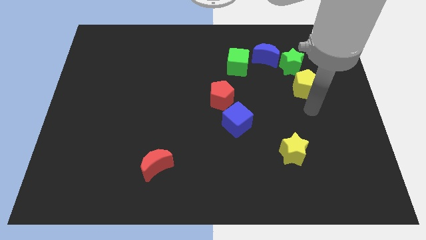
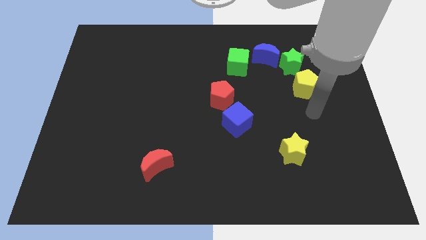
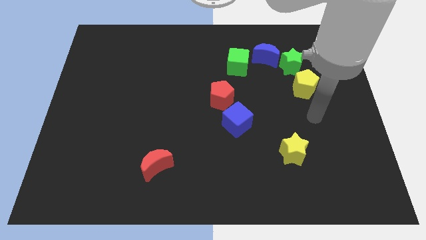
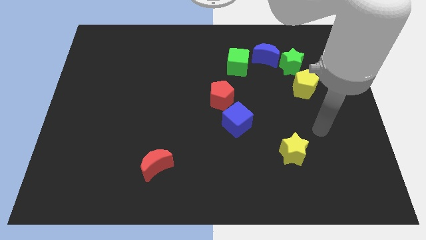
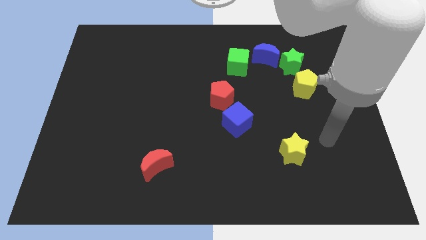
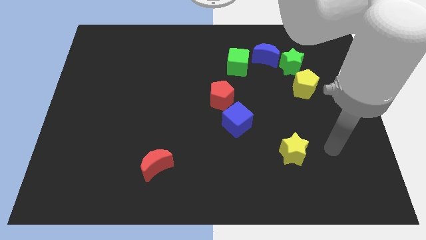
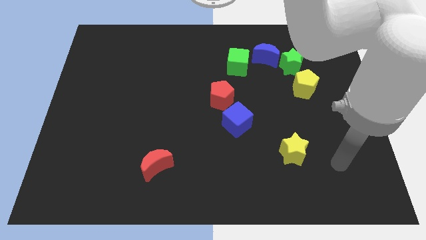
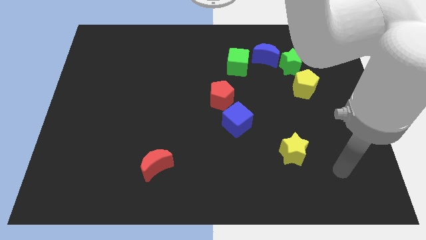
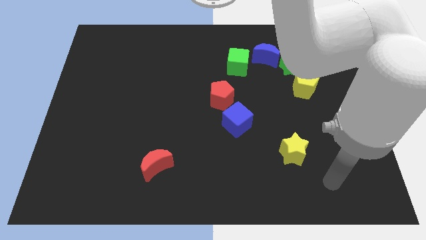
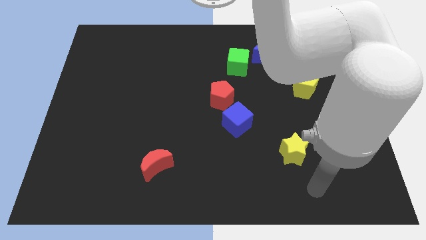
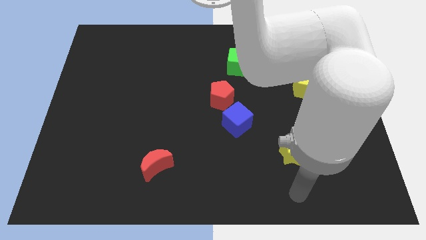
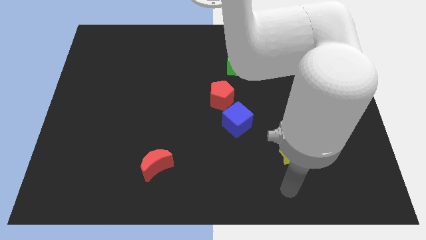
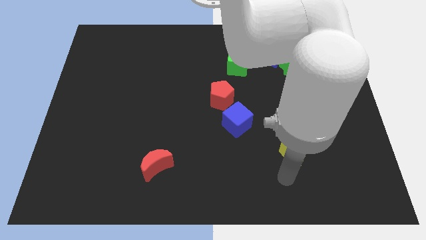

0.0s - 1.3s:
place your arm at the bottom of the yellow star

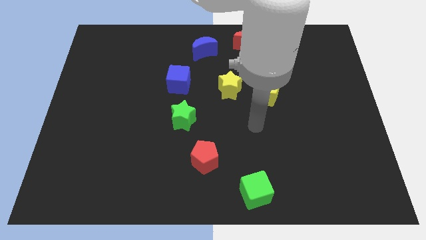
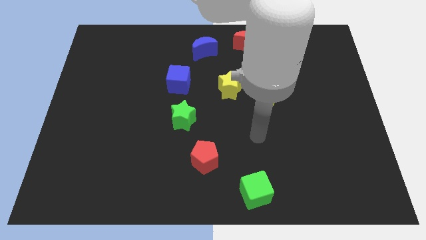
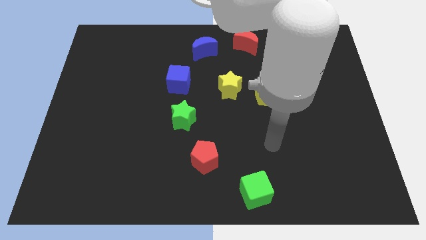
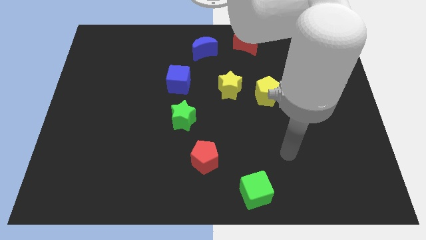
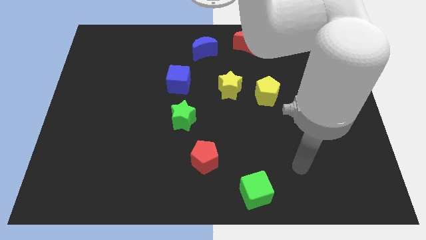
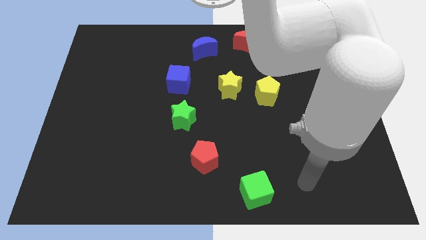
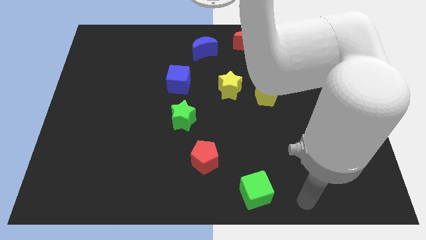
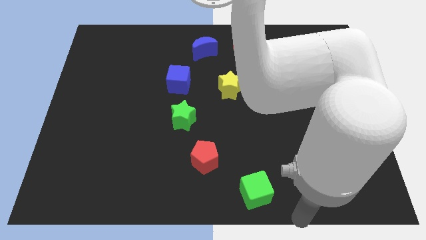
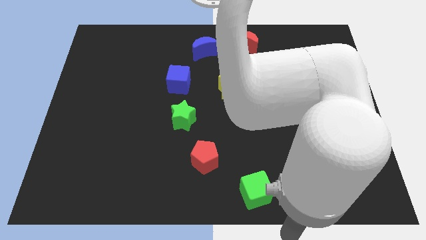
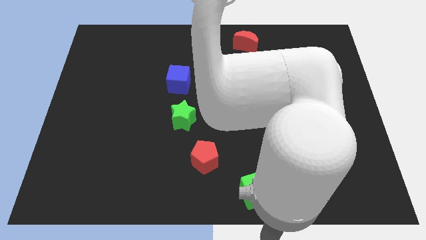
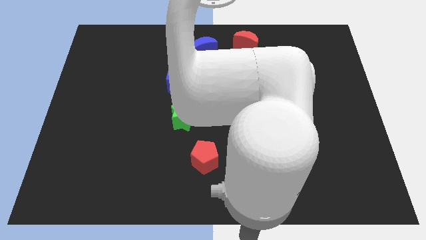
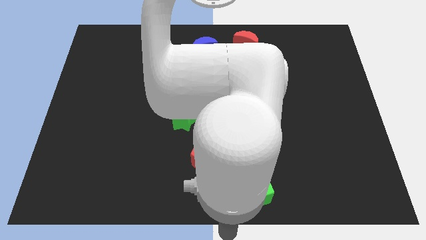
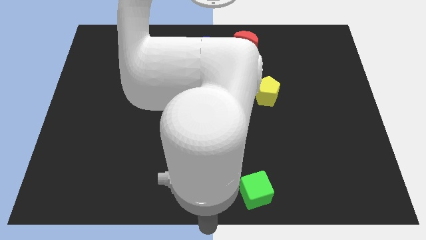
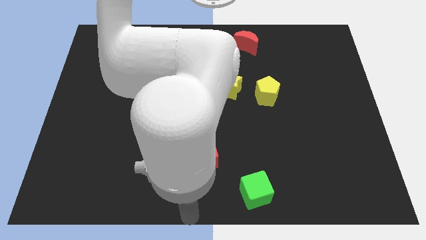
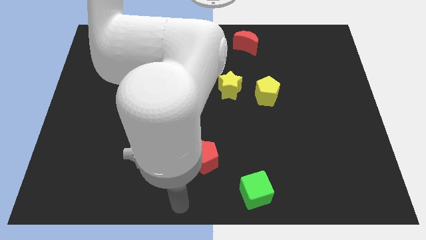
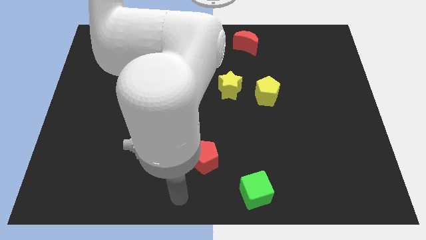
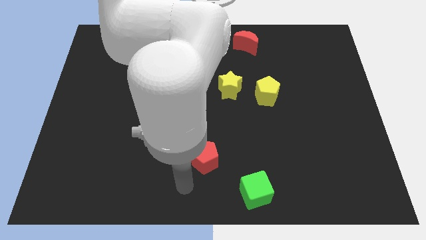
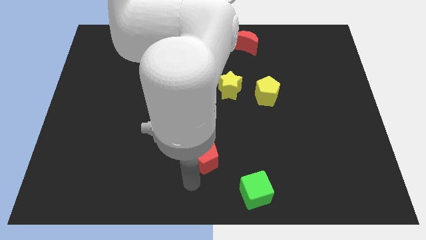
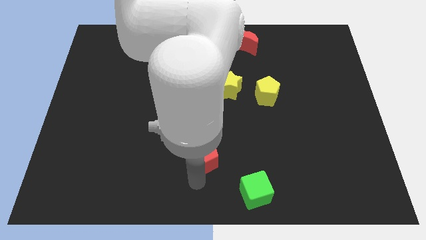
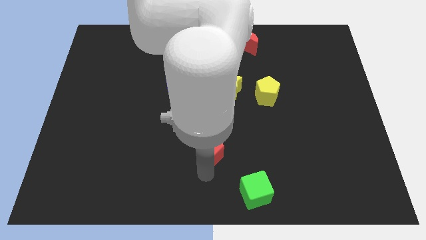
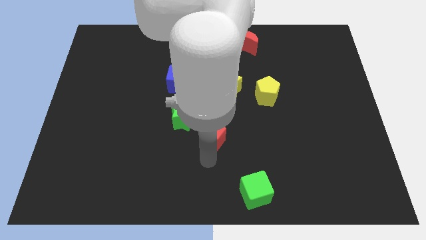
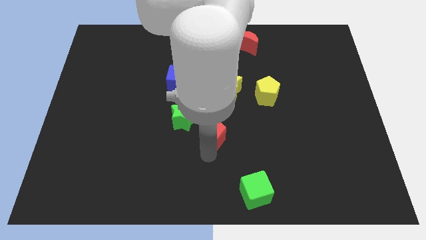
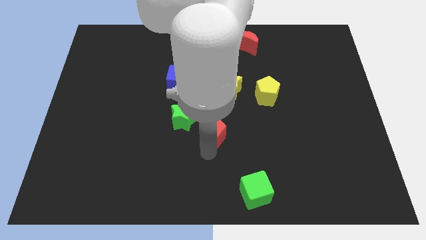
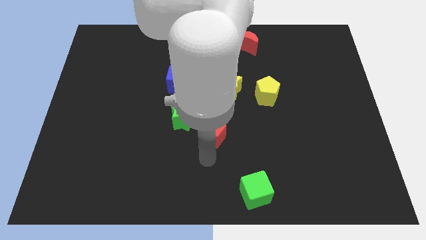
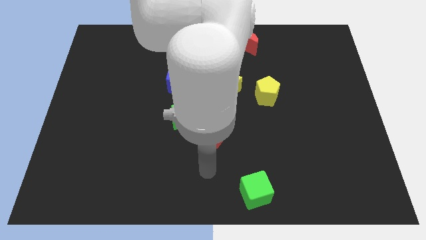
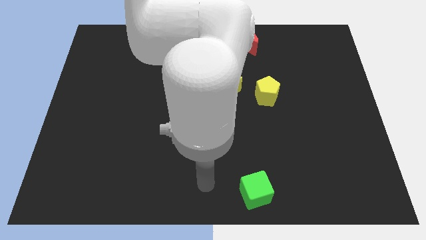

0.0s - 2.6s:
push the red pentagon slightly upward

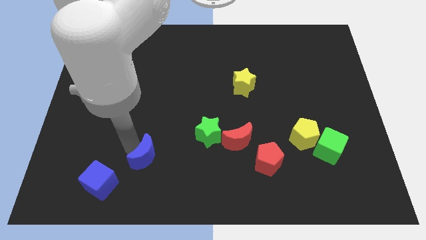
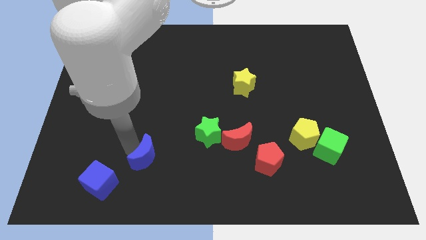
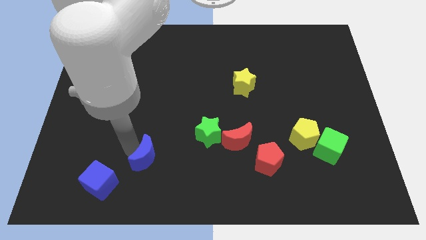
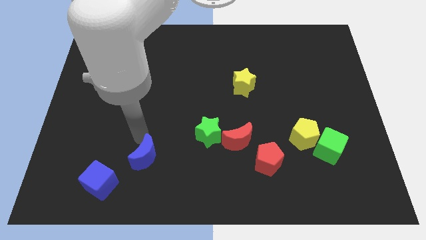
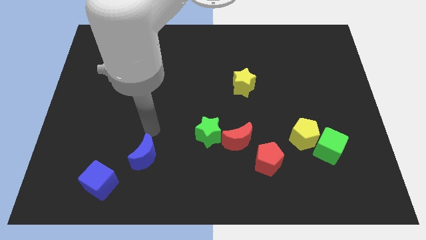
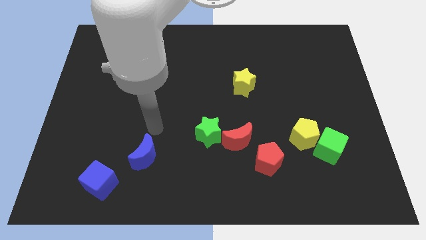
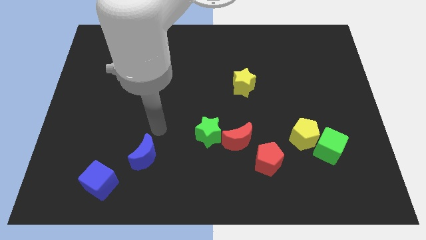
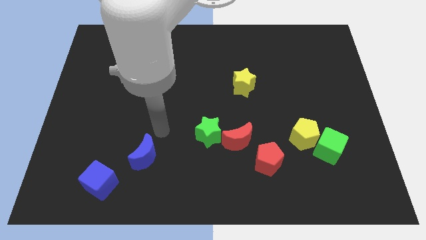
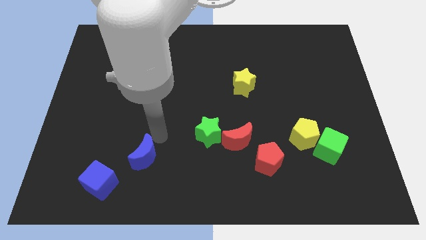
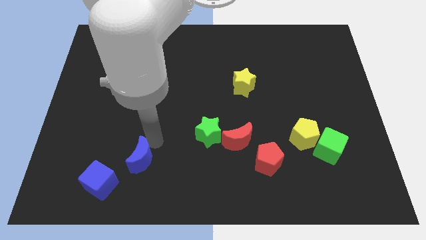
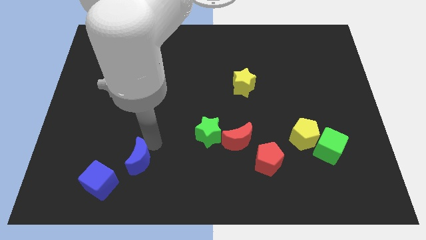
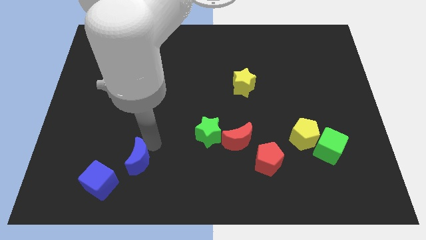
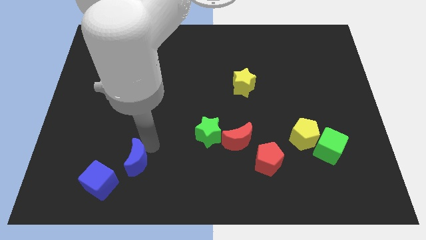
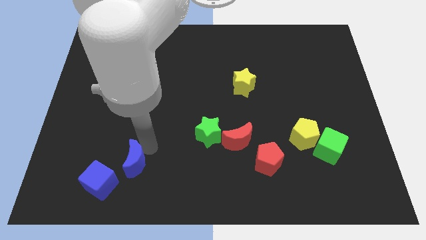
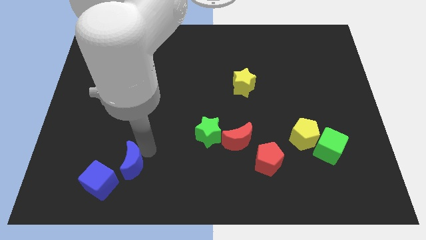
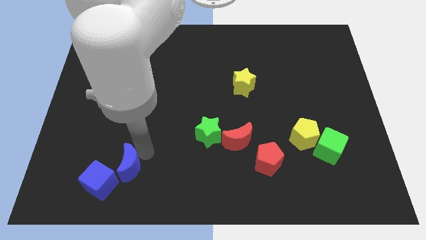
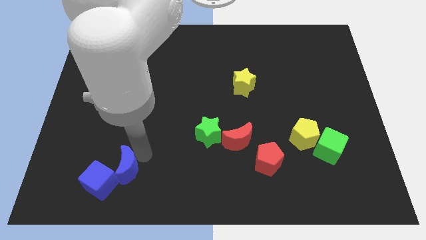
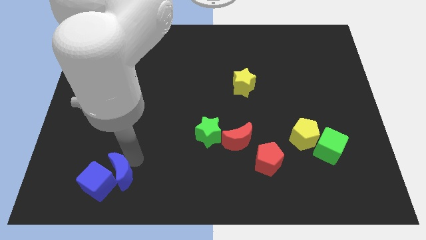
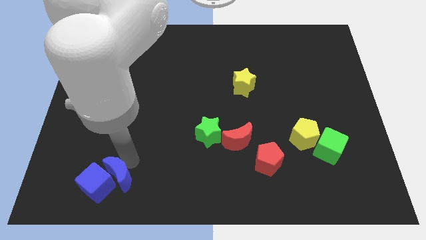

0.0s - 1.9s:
push the blue crescent into the blue moon

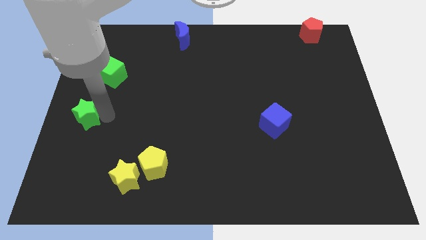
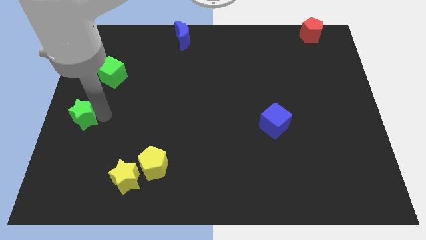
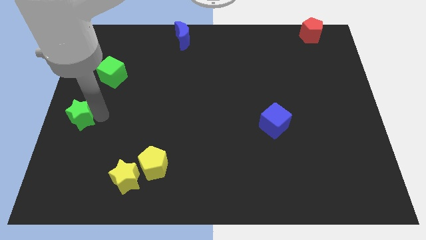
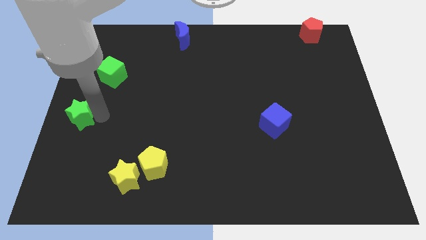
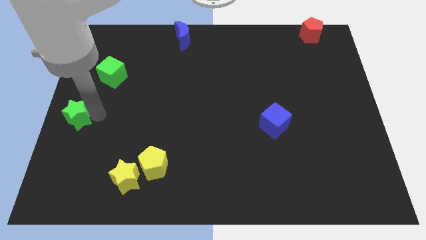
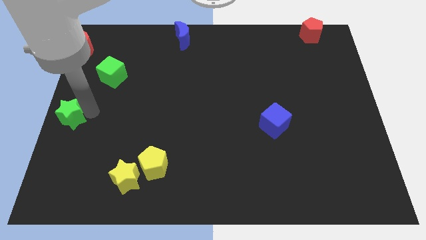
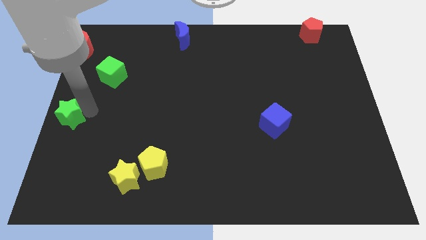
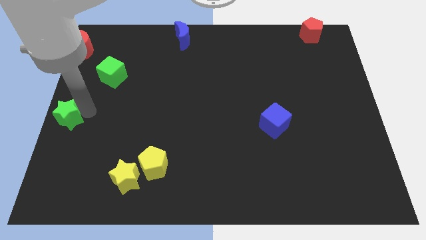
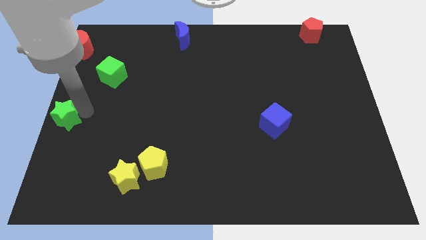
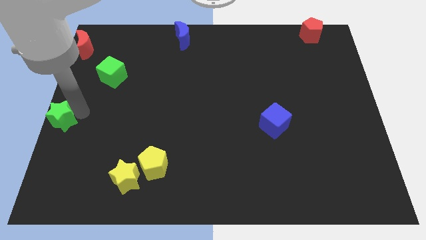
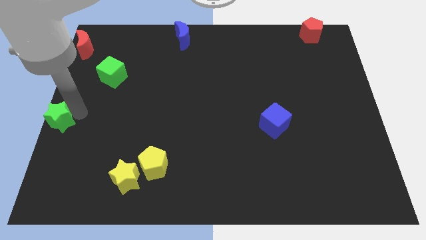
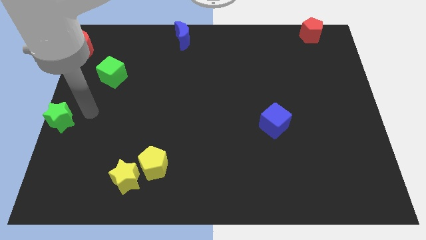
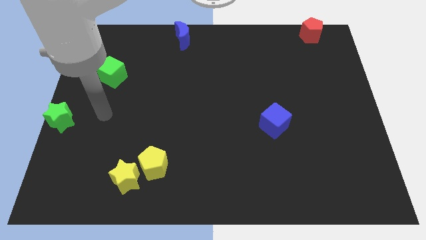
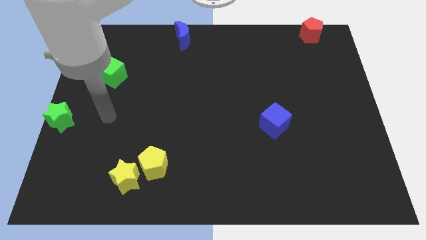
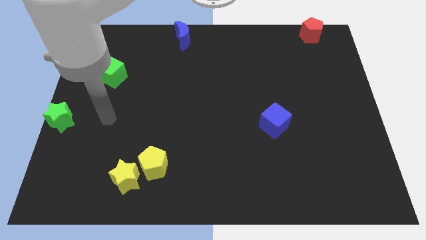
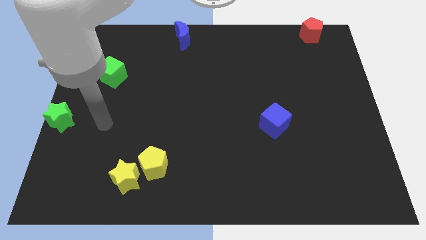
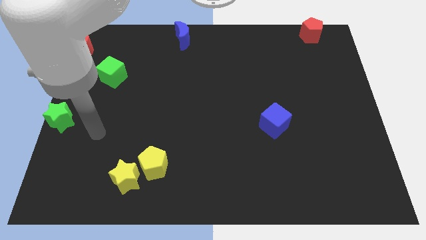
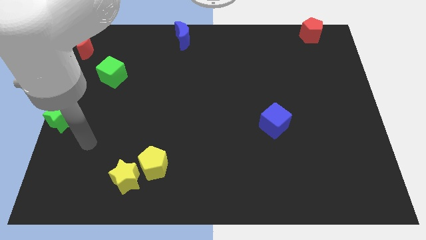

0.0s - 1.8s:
push the green star towards the center left of the board

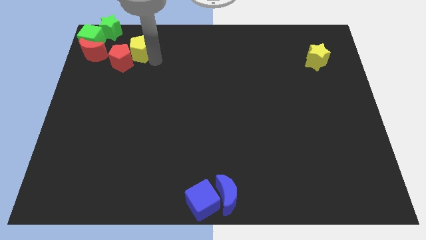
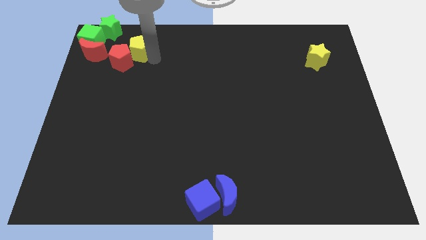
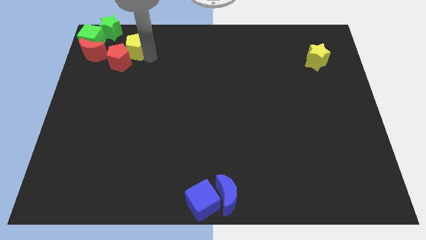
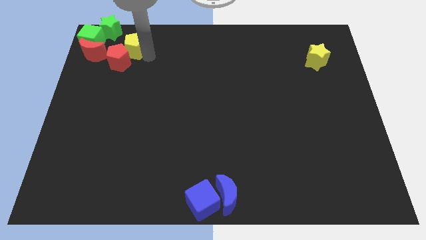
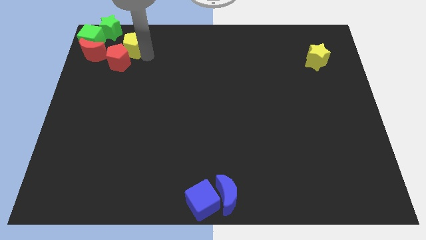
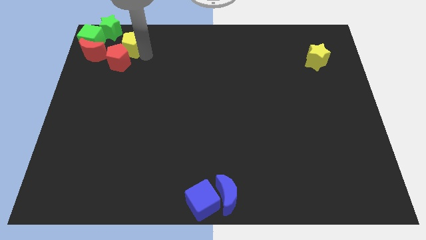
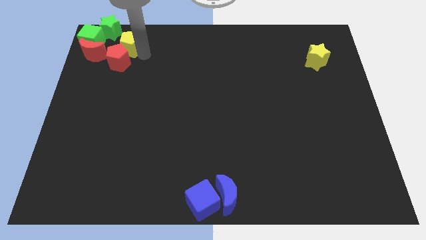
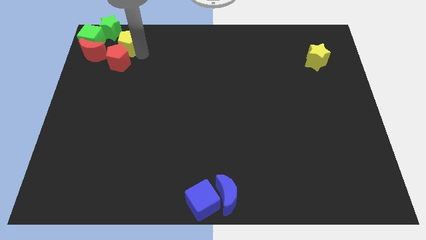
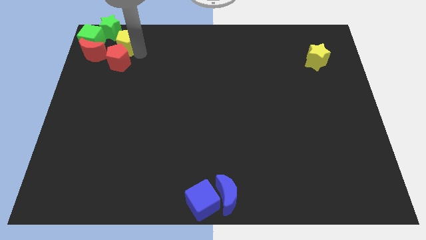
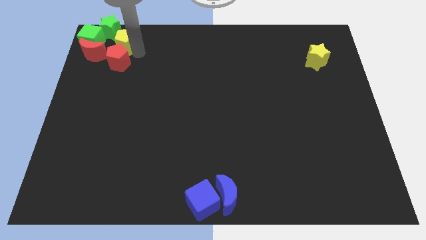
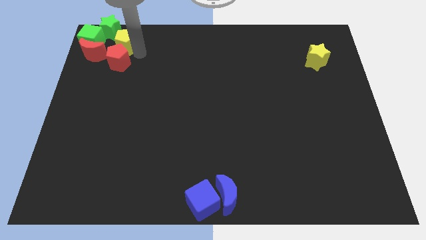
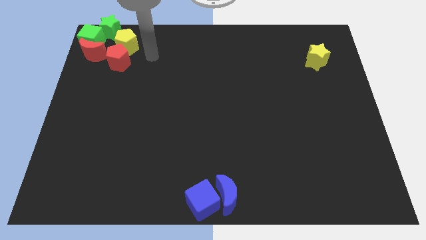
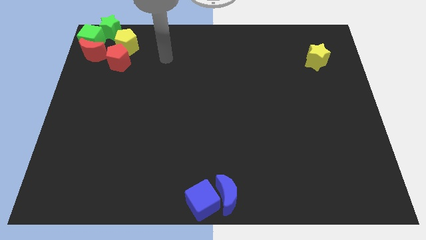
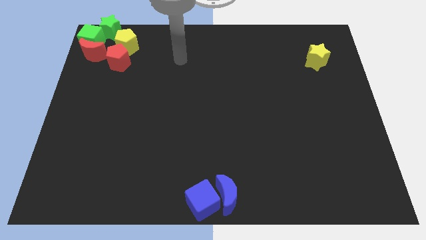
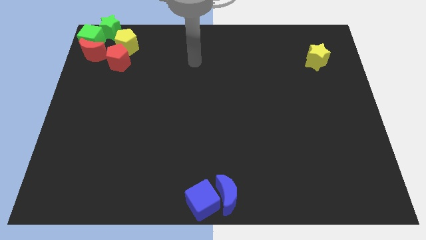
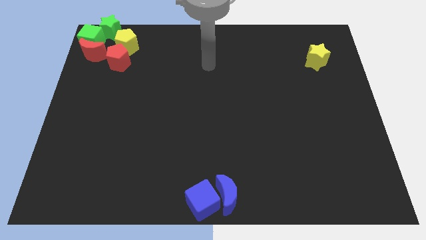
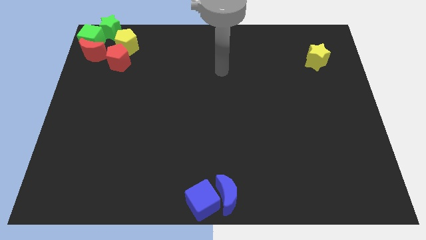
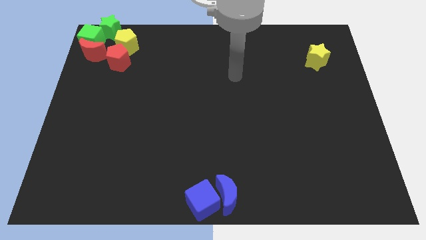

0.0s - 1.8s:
push red pentagon and yellow pentagon to top left corner to form a circle
